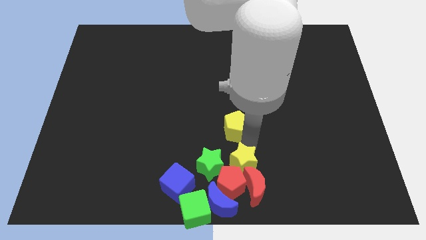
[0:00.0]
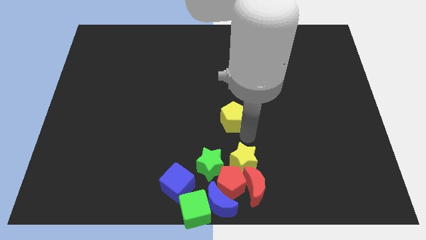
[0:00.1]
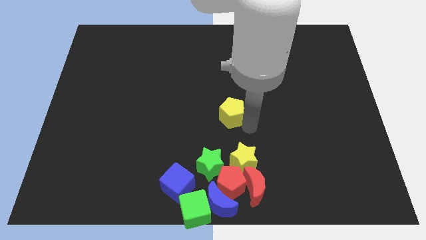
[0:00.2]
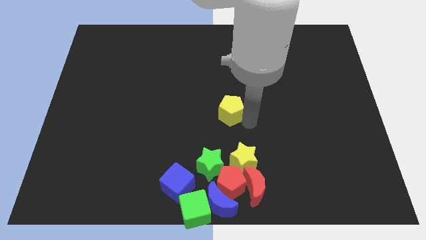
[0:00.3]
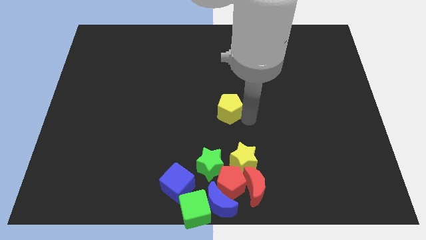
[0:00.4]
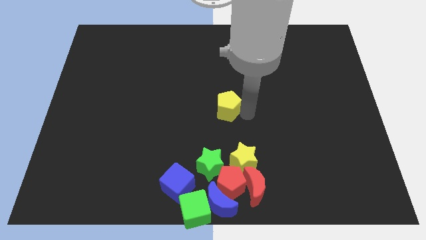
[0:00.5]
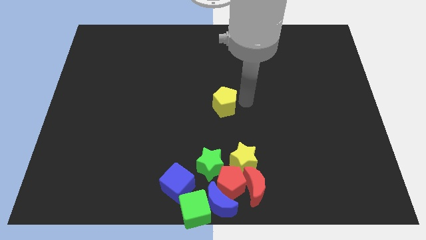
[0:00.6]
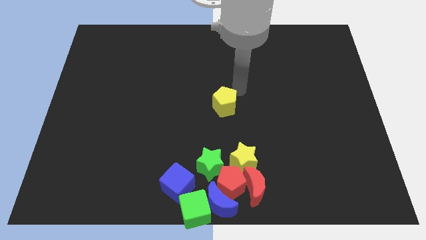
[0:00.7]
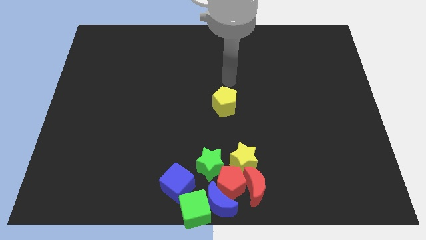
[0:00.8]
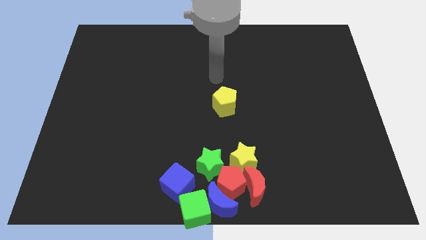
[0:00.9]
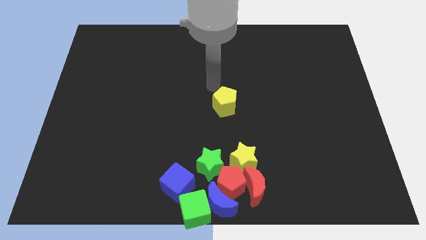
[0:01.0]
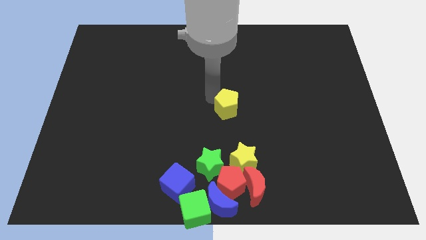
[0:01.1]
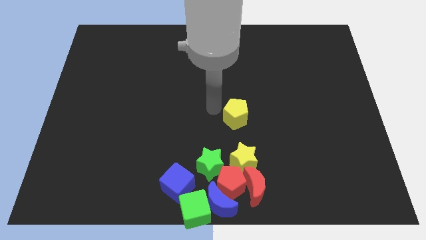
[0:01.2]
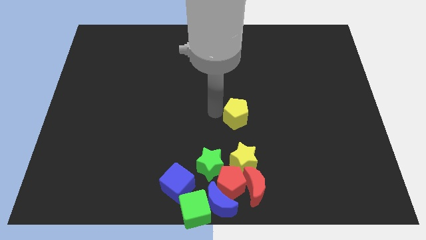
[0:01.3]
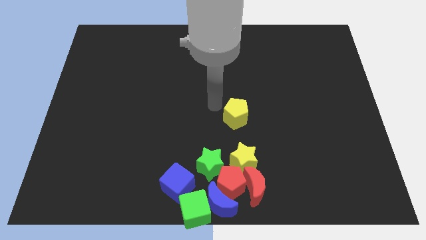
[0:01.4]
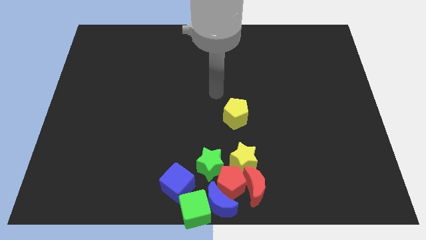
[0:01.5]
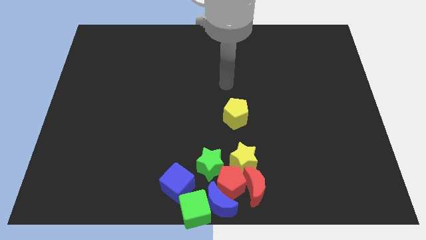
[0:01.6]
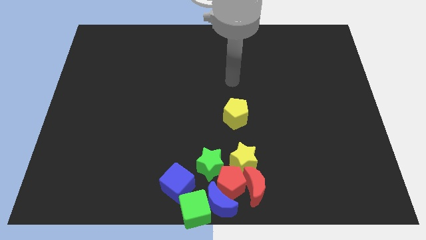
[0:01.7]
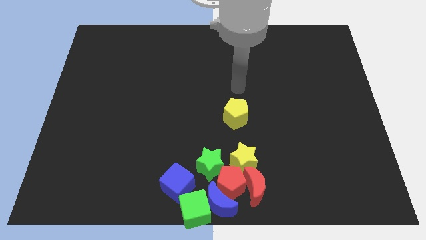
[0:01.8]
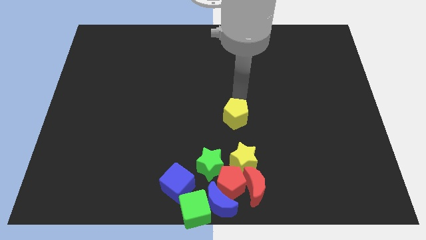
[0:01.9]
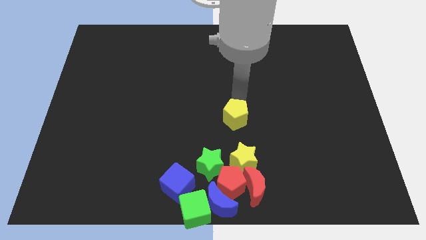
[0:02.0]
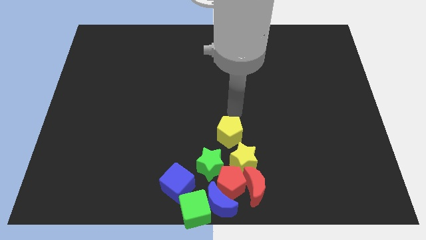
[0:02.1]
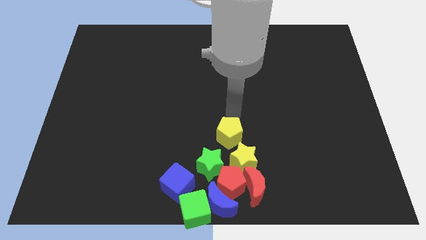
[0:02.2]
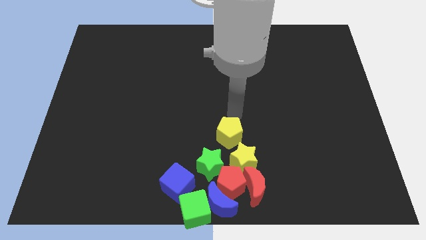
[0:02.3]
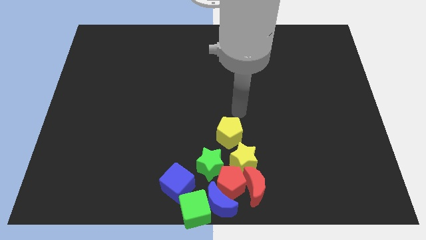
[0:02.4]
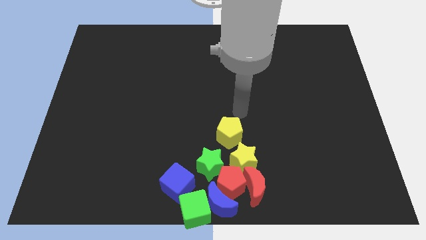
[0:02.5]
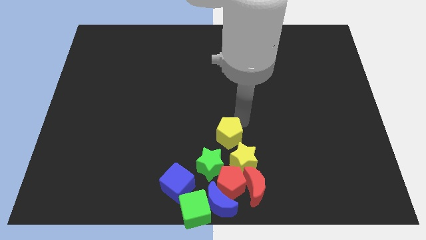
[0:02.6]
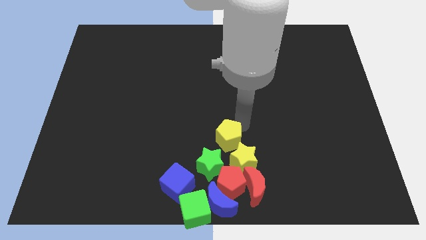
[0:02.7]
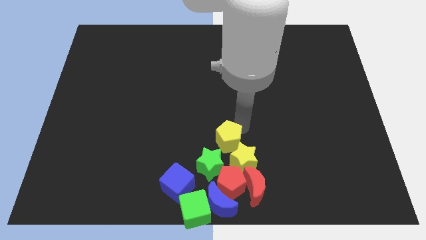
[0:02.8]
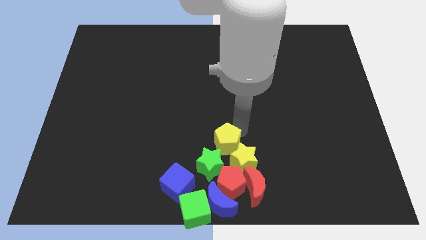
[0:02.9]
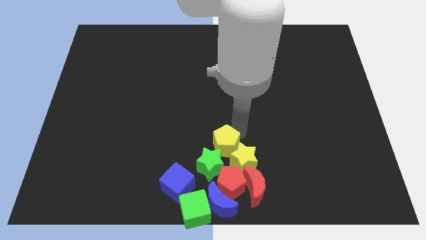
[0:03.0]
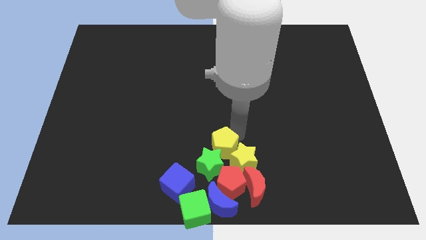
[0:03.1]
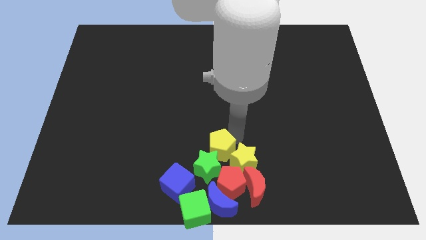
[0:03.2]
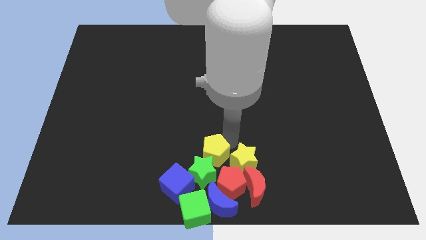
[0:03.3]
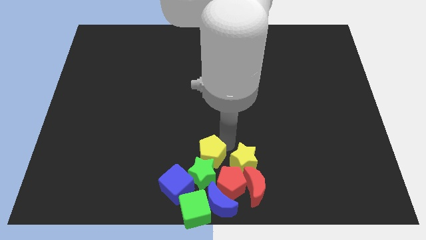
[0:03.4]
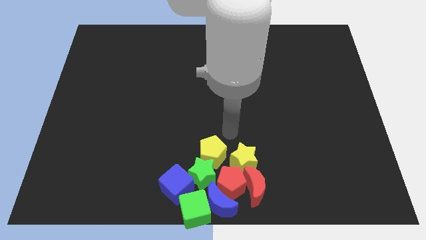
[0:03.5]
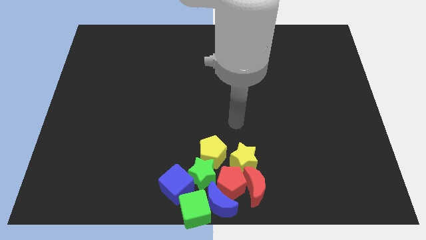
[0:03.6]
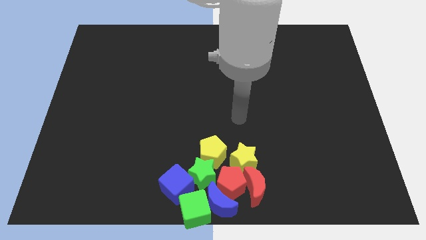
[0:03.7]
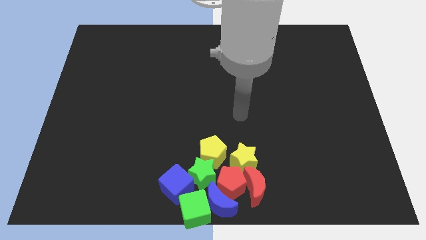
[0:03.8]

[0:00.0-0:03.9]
push yellow pentagon into the green star

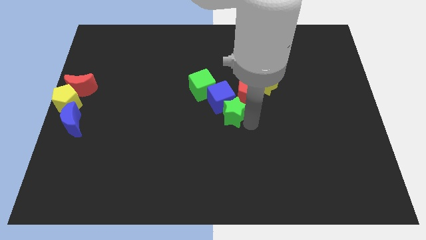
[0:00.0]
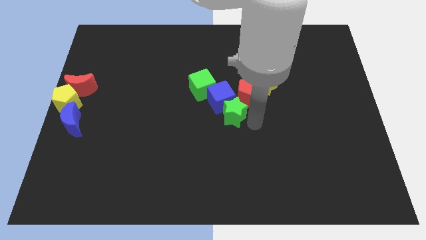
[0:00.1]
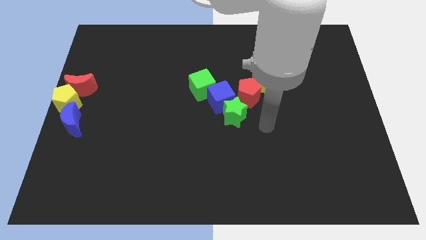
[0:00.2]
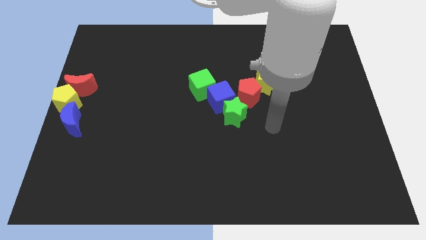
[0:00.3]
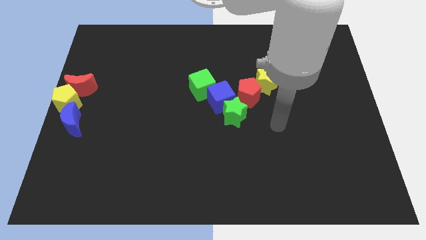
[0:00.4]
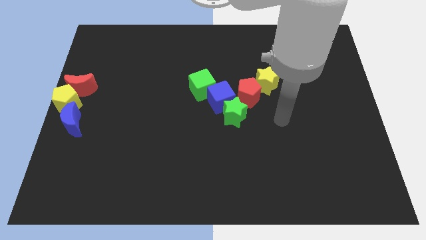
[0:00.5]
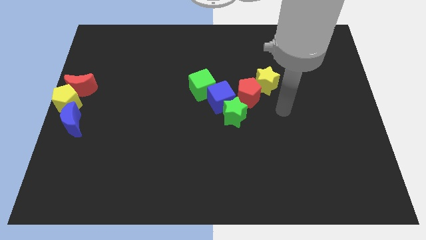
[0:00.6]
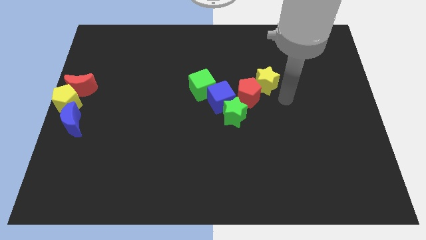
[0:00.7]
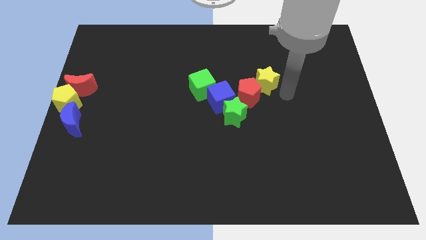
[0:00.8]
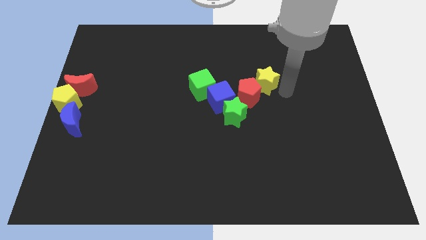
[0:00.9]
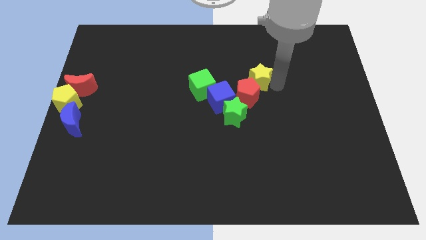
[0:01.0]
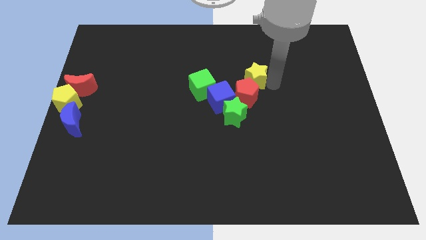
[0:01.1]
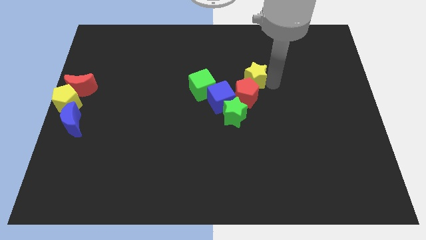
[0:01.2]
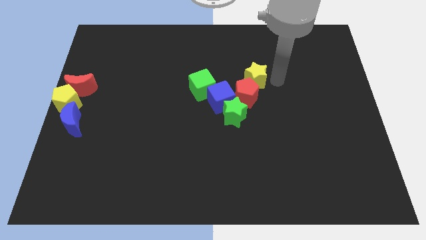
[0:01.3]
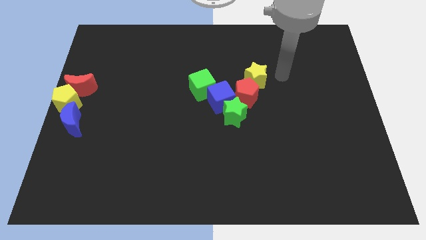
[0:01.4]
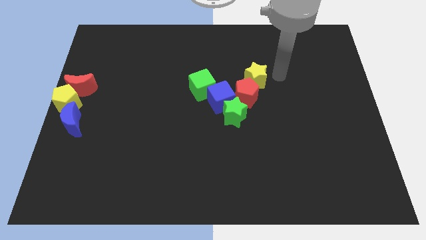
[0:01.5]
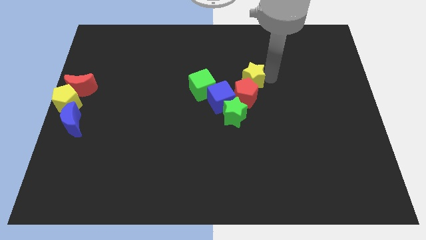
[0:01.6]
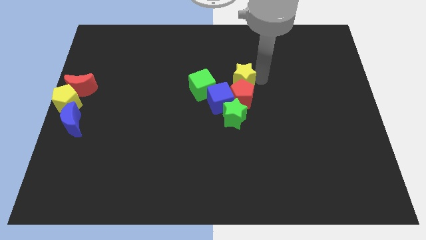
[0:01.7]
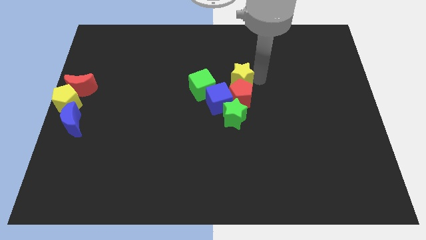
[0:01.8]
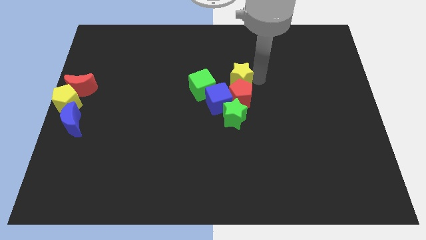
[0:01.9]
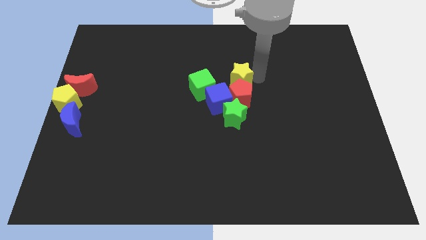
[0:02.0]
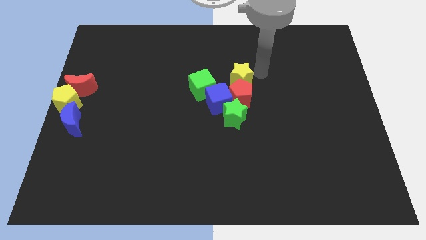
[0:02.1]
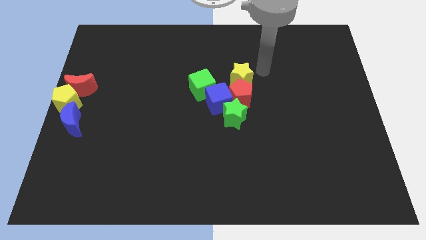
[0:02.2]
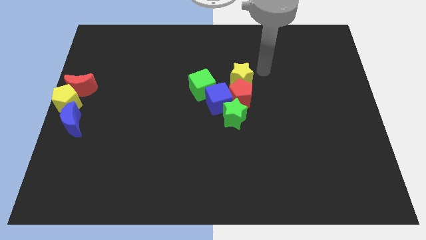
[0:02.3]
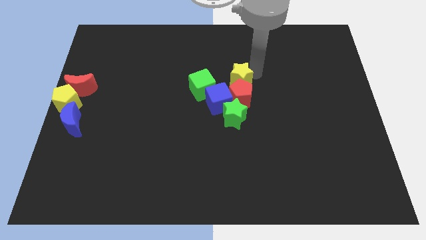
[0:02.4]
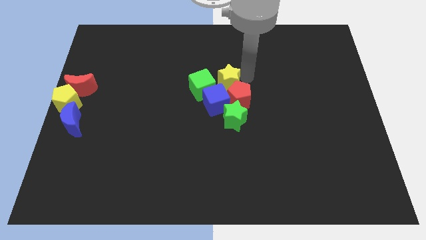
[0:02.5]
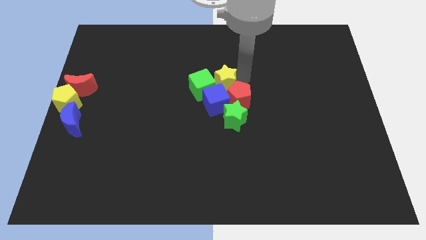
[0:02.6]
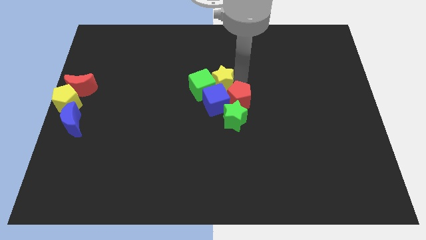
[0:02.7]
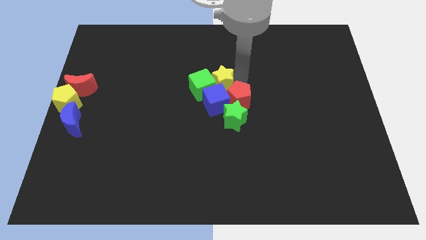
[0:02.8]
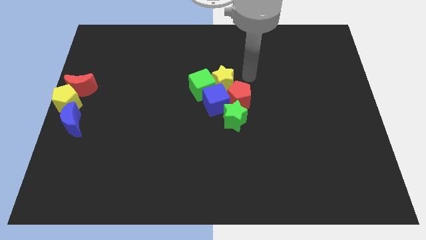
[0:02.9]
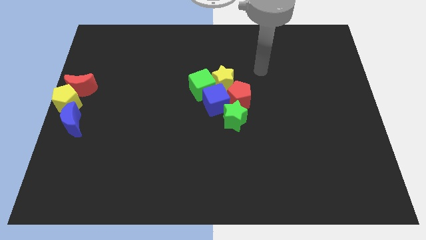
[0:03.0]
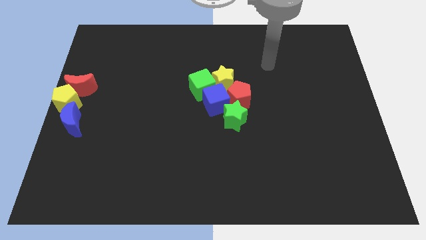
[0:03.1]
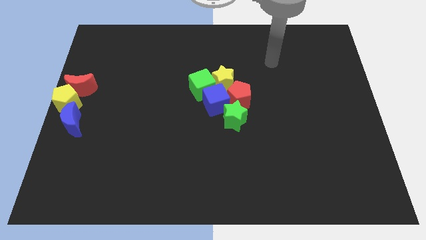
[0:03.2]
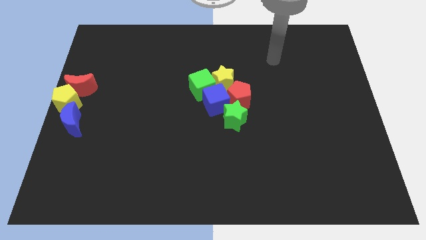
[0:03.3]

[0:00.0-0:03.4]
push the yellow star into green cube

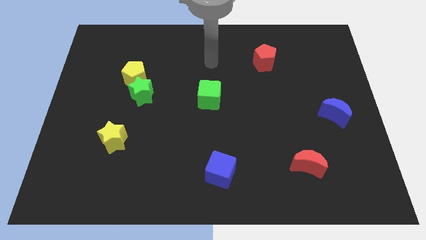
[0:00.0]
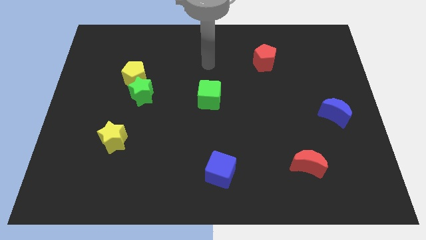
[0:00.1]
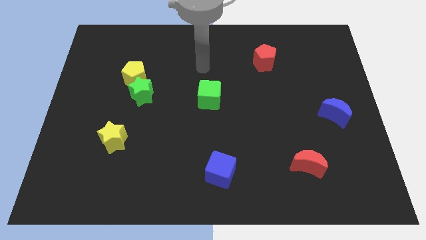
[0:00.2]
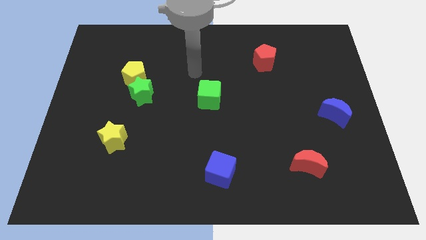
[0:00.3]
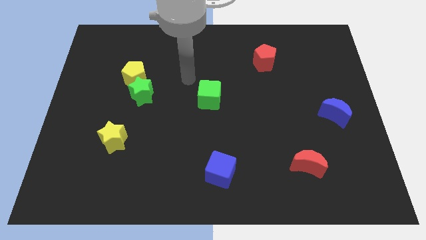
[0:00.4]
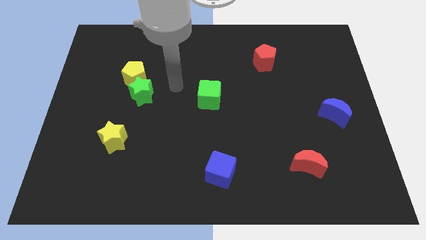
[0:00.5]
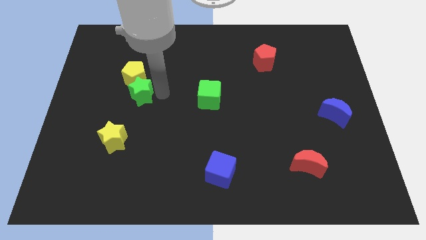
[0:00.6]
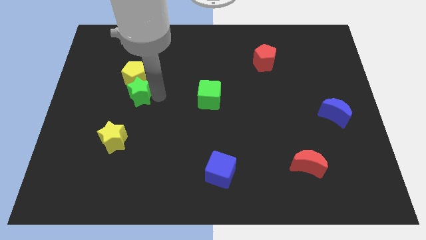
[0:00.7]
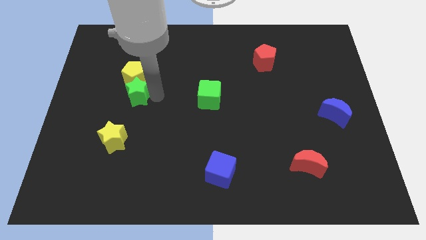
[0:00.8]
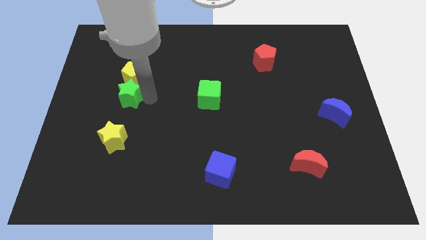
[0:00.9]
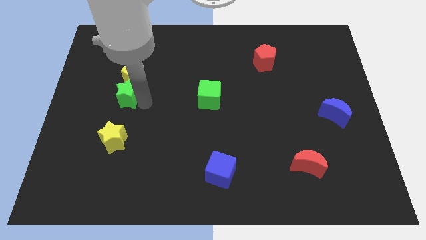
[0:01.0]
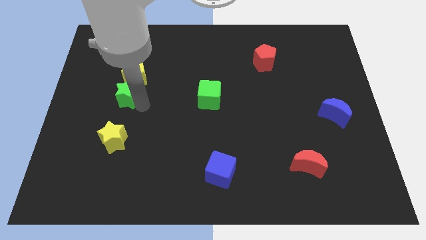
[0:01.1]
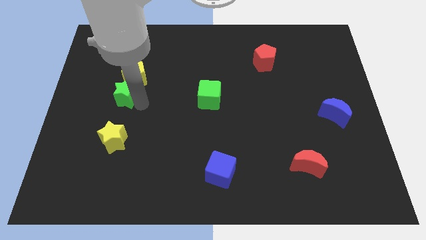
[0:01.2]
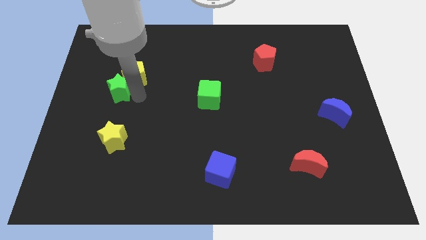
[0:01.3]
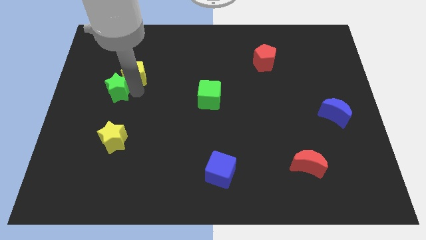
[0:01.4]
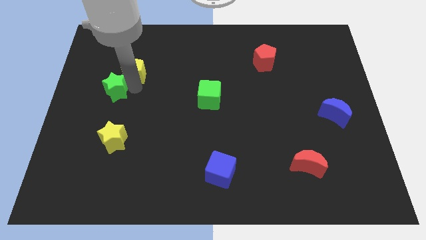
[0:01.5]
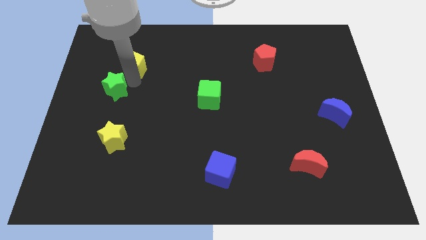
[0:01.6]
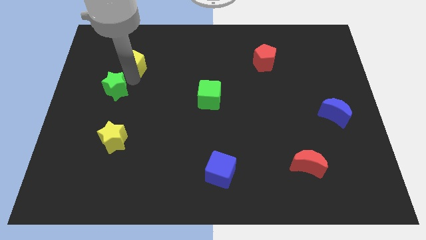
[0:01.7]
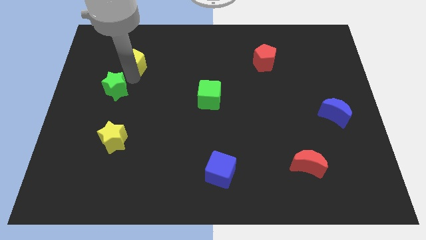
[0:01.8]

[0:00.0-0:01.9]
separate the green star from the yellow pentagon
